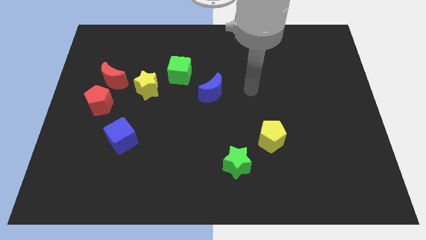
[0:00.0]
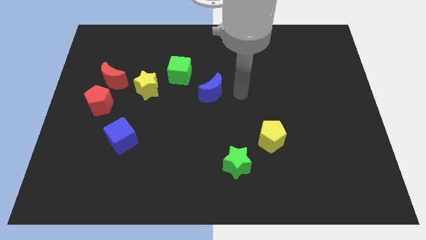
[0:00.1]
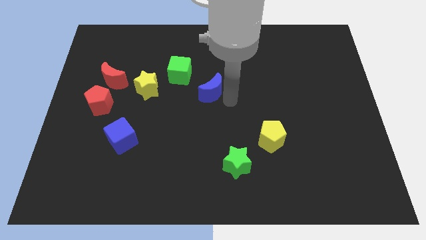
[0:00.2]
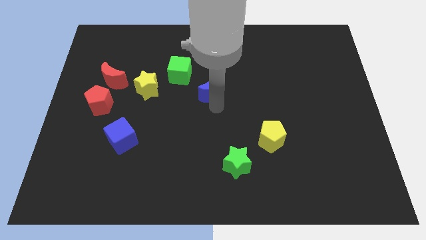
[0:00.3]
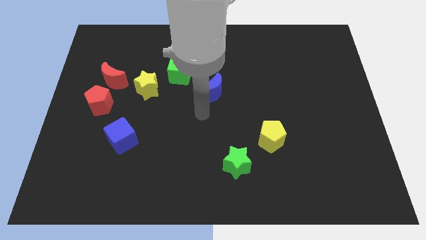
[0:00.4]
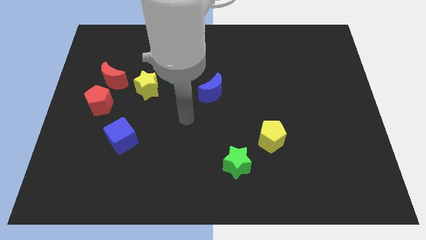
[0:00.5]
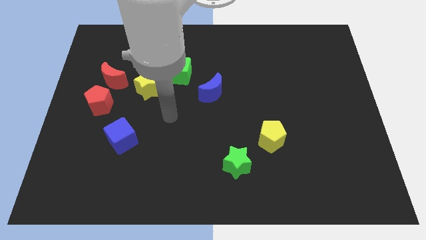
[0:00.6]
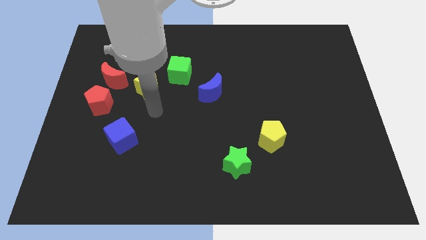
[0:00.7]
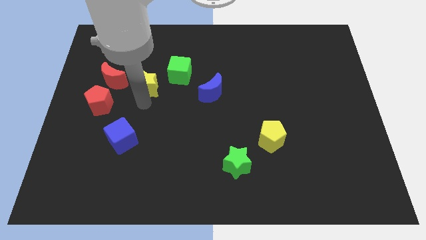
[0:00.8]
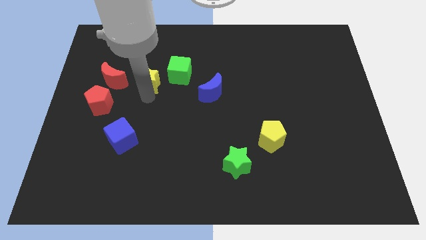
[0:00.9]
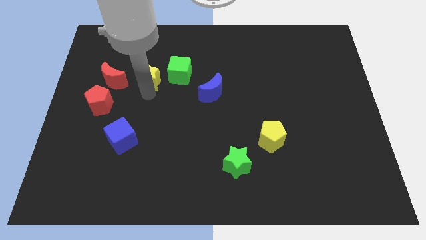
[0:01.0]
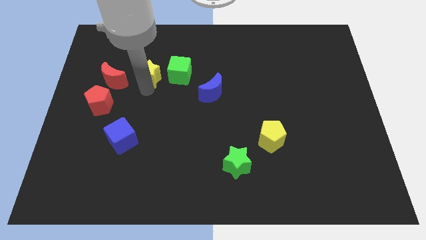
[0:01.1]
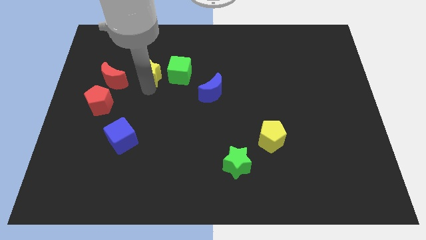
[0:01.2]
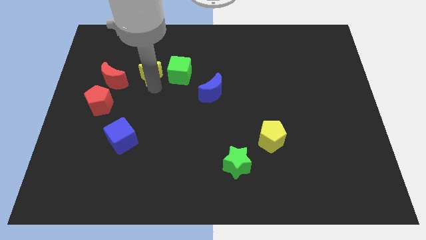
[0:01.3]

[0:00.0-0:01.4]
place the yellow star in between the green cube and red crescent

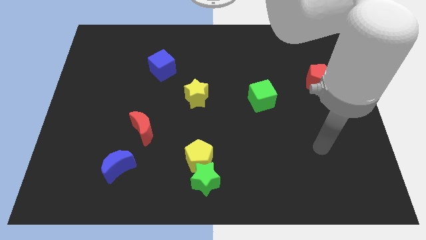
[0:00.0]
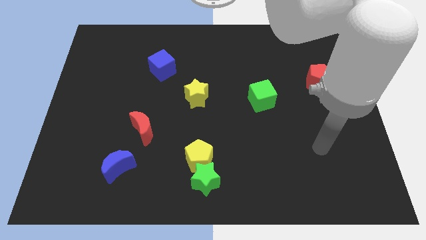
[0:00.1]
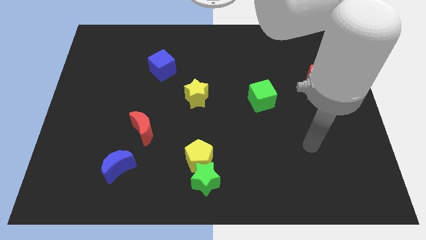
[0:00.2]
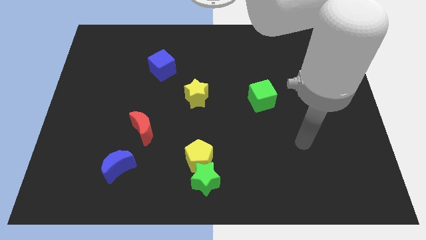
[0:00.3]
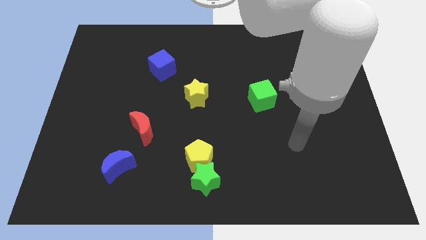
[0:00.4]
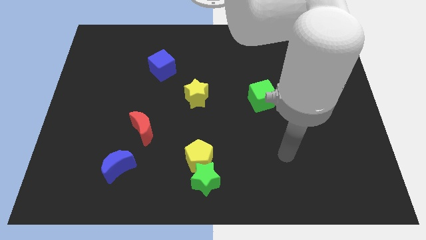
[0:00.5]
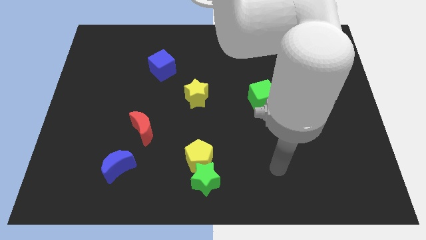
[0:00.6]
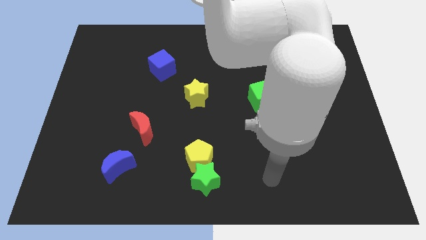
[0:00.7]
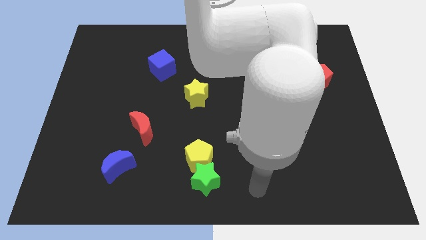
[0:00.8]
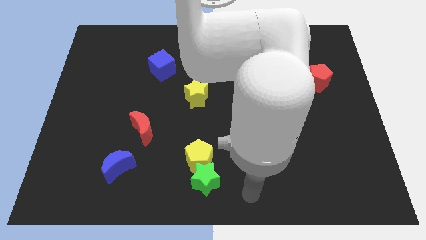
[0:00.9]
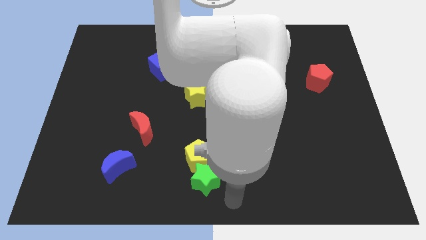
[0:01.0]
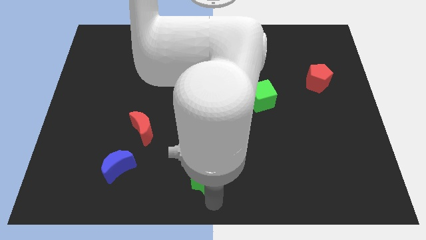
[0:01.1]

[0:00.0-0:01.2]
go near the green star

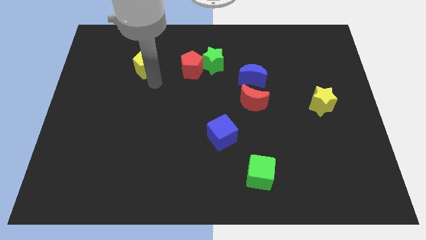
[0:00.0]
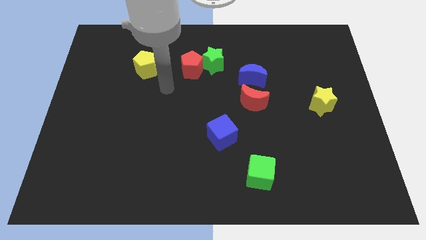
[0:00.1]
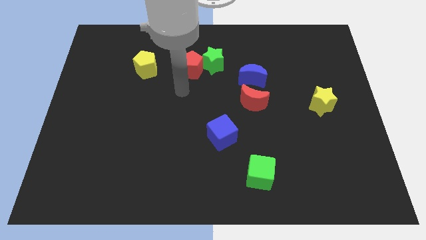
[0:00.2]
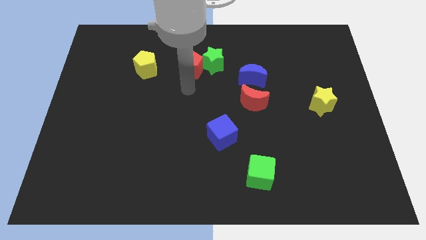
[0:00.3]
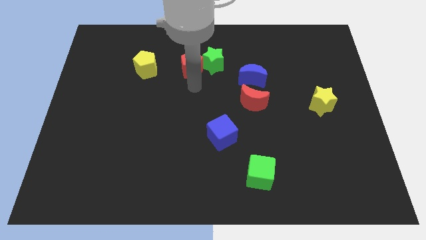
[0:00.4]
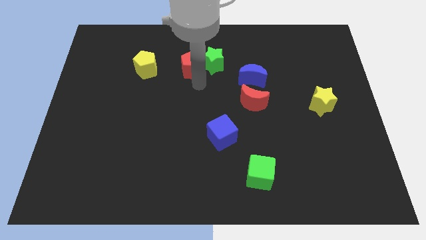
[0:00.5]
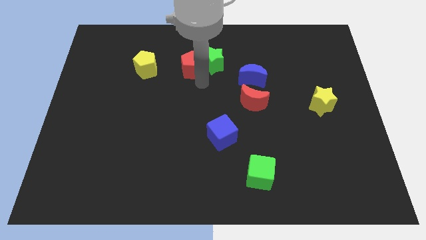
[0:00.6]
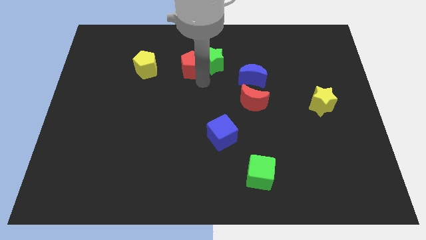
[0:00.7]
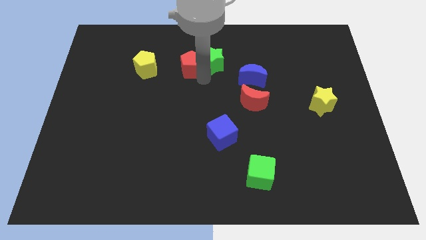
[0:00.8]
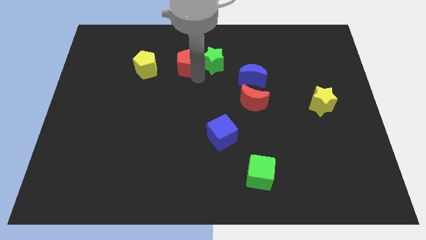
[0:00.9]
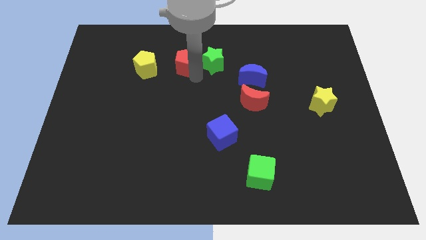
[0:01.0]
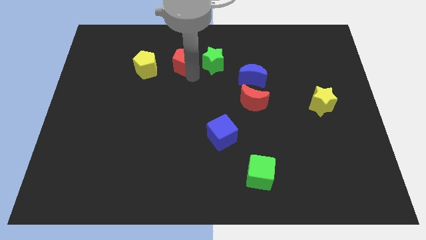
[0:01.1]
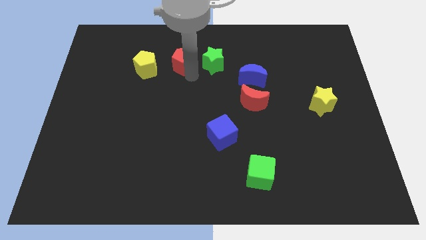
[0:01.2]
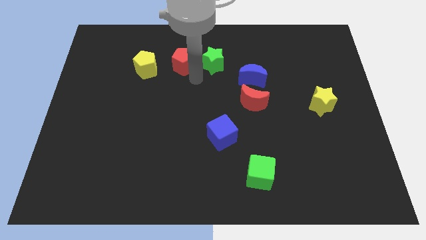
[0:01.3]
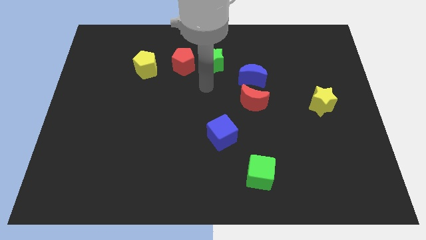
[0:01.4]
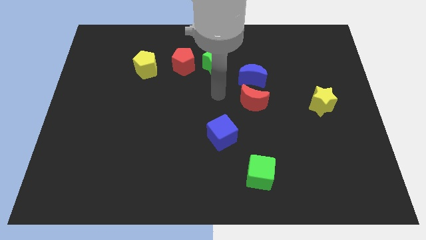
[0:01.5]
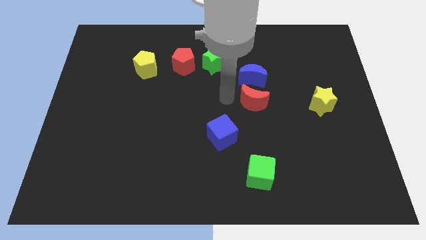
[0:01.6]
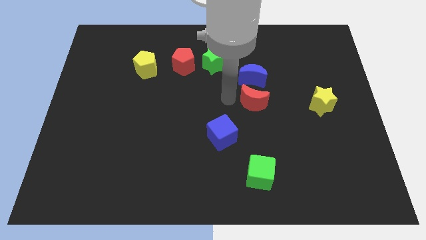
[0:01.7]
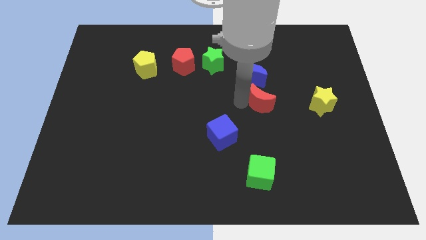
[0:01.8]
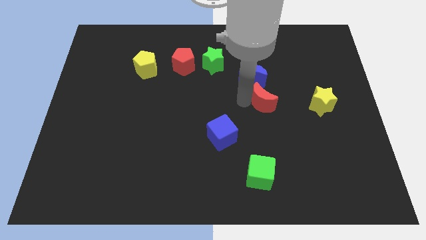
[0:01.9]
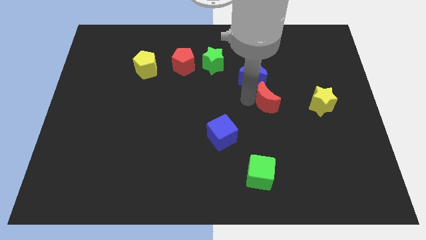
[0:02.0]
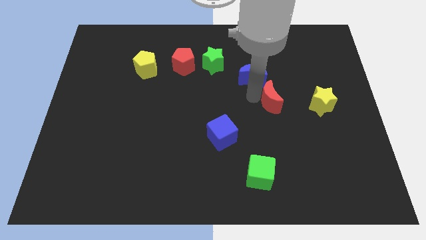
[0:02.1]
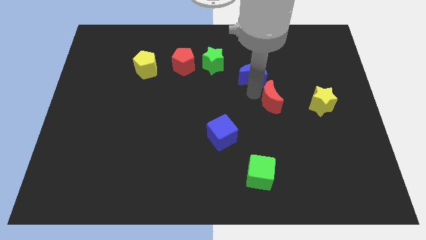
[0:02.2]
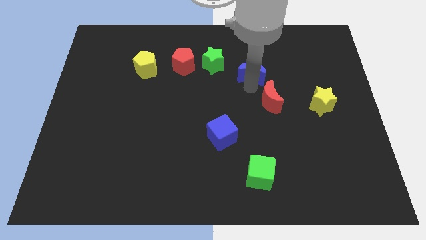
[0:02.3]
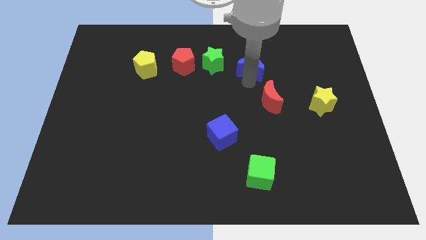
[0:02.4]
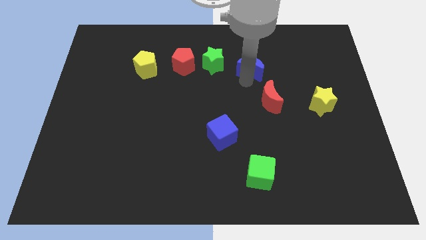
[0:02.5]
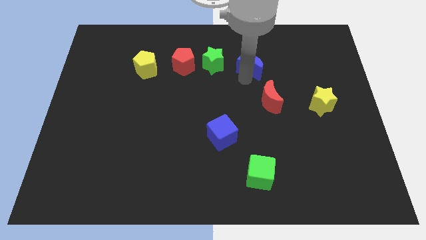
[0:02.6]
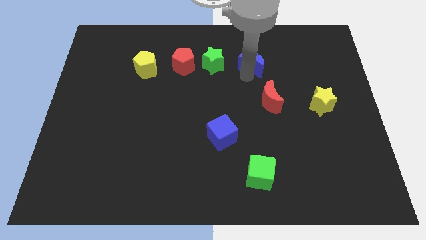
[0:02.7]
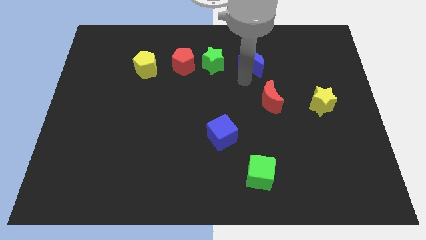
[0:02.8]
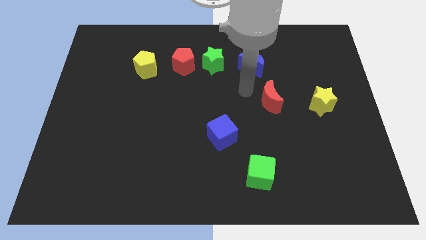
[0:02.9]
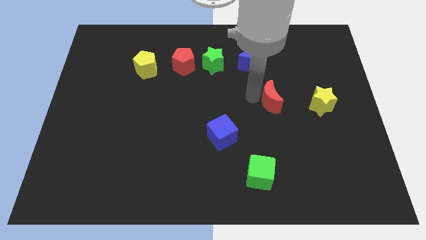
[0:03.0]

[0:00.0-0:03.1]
move the red pentagon and blue crescent slightly to the top side of the board

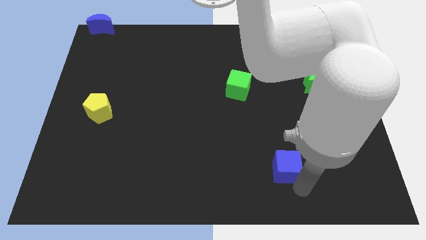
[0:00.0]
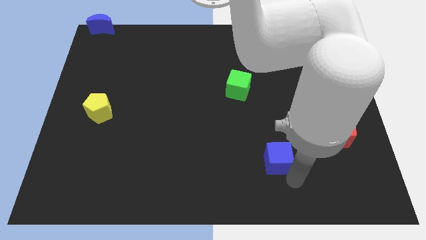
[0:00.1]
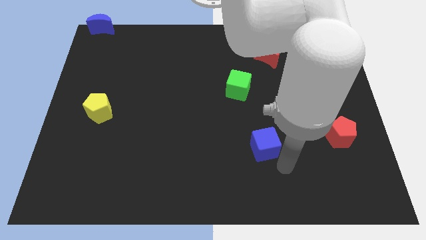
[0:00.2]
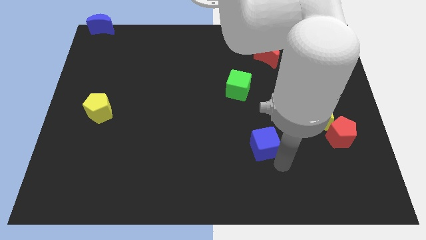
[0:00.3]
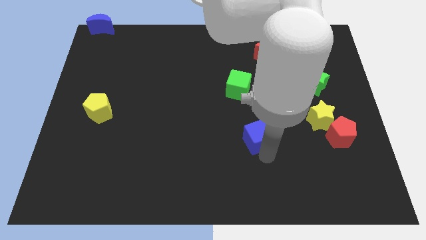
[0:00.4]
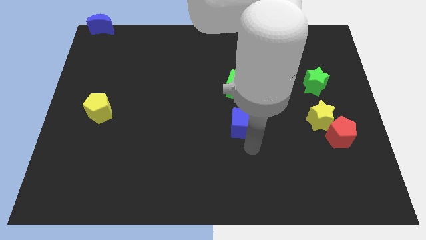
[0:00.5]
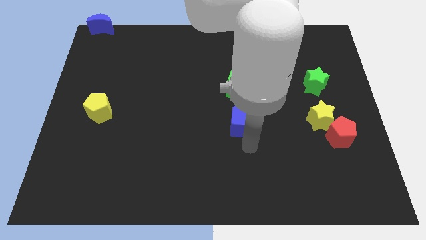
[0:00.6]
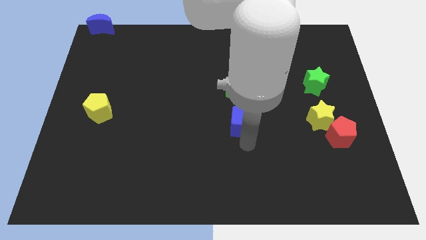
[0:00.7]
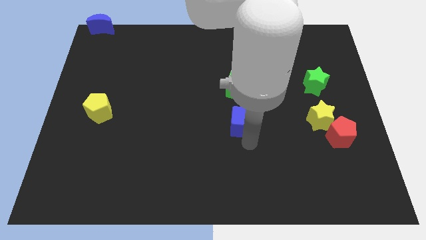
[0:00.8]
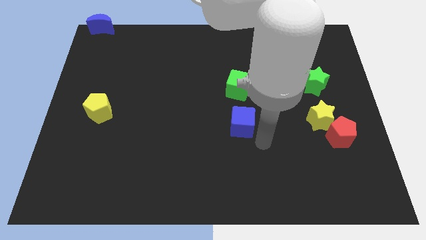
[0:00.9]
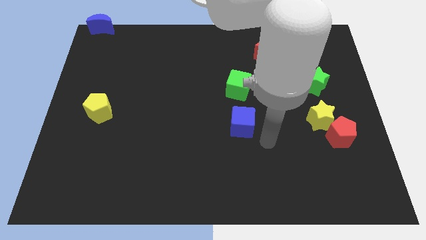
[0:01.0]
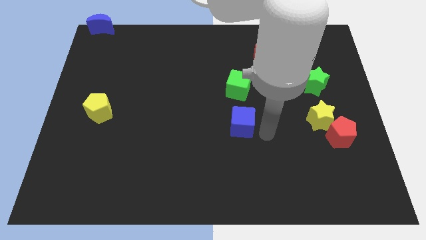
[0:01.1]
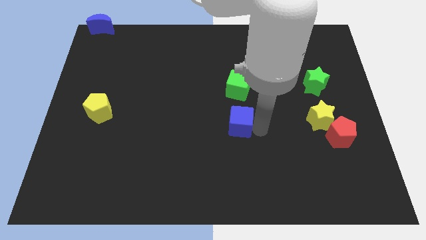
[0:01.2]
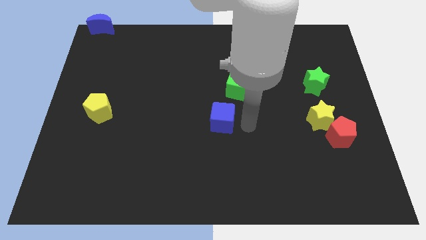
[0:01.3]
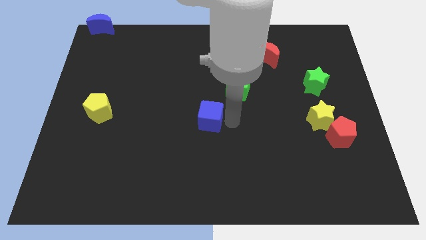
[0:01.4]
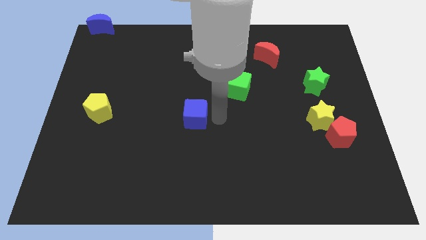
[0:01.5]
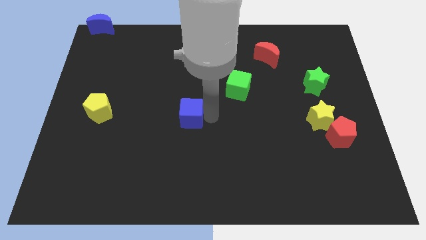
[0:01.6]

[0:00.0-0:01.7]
push the blue cube to the center of the board

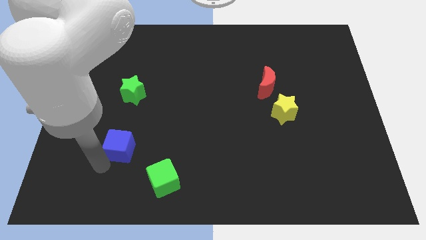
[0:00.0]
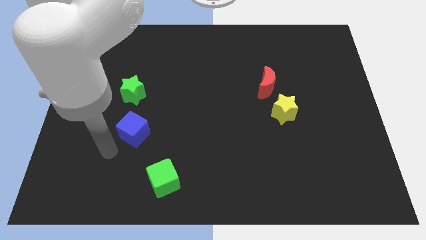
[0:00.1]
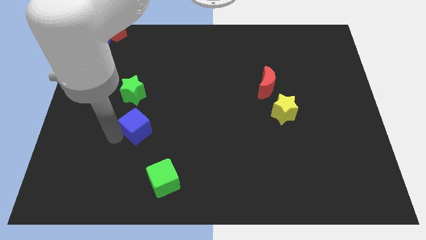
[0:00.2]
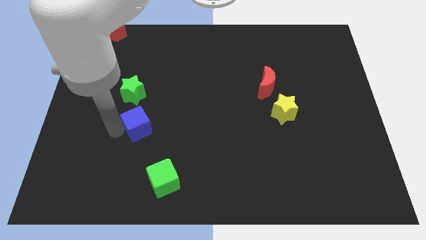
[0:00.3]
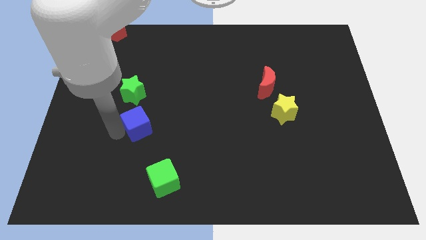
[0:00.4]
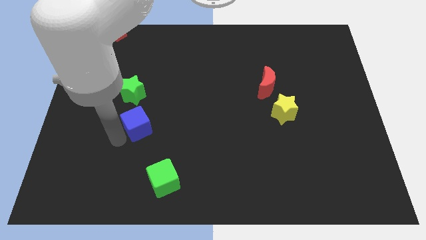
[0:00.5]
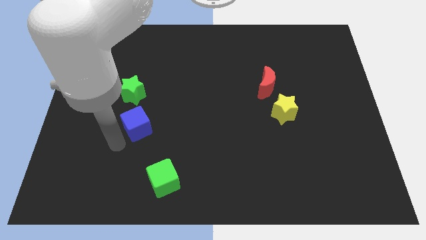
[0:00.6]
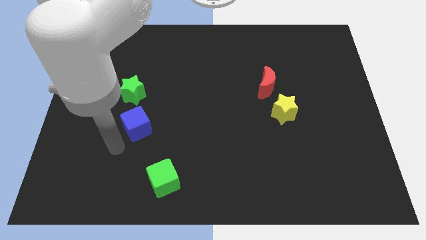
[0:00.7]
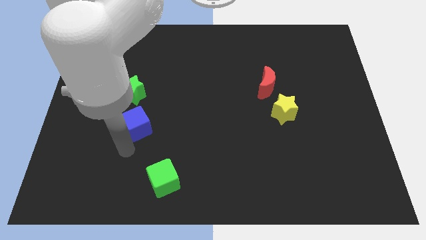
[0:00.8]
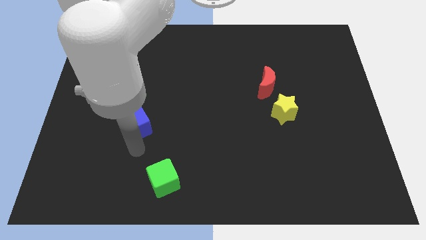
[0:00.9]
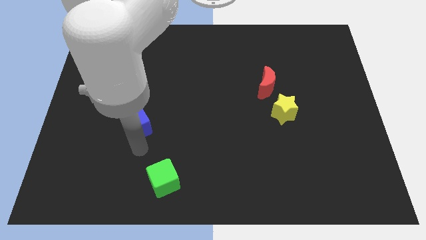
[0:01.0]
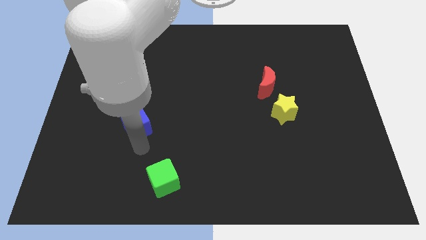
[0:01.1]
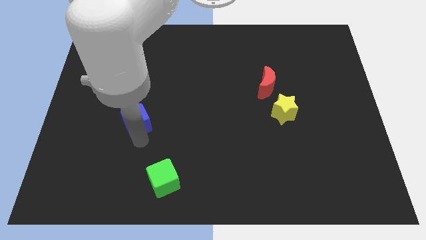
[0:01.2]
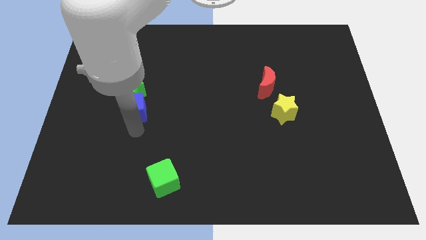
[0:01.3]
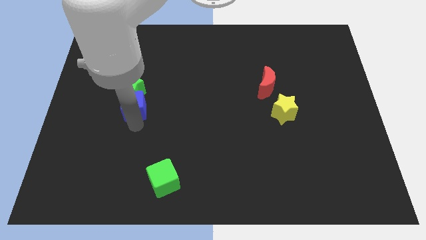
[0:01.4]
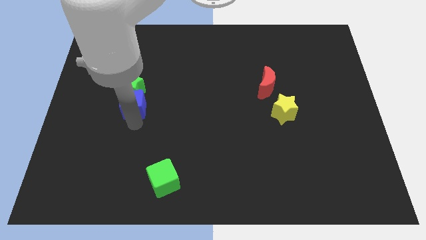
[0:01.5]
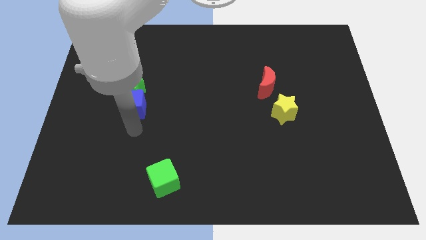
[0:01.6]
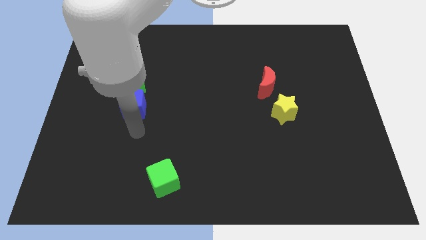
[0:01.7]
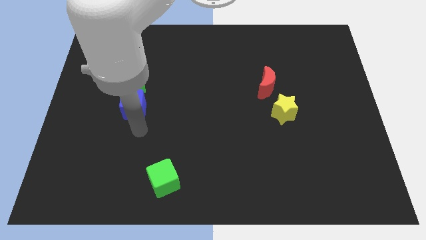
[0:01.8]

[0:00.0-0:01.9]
push the blue cube into the green star
